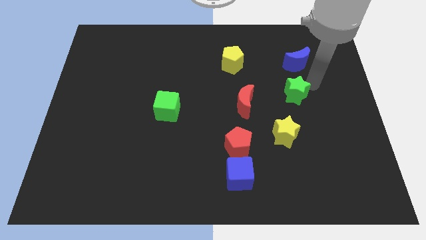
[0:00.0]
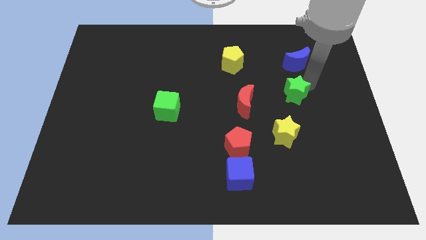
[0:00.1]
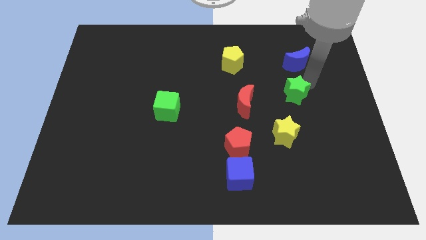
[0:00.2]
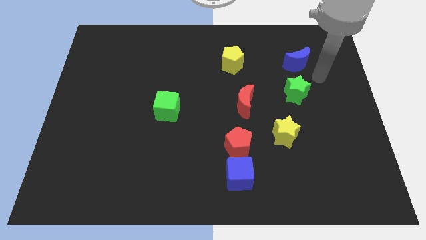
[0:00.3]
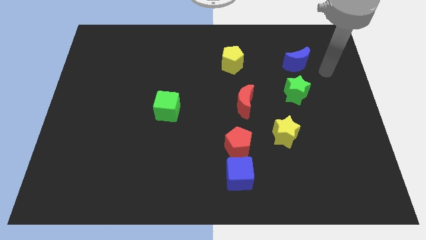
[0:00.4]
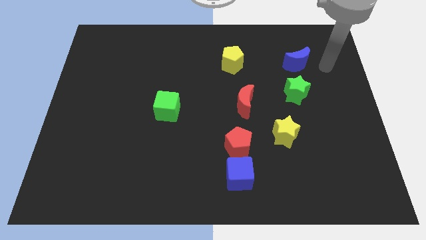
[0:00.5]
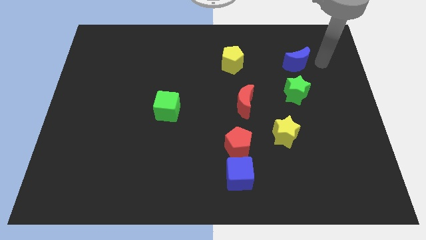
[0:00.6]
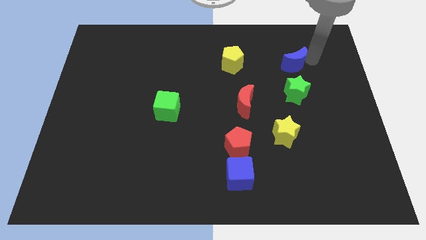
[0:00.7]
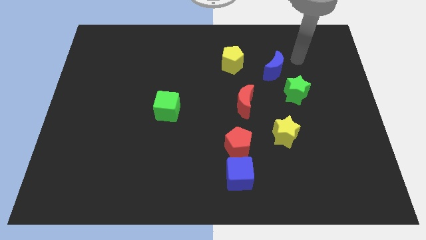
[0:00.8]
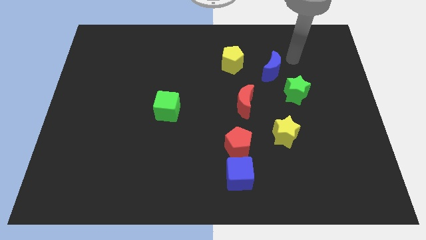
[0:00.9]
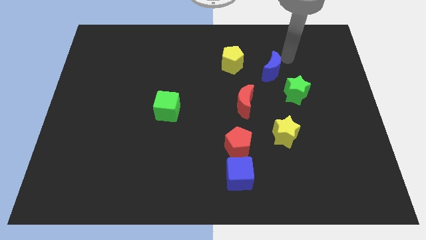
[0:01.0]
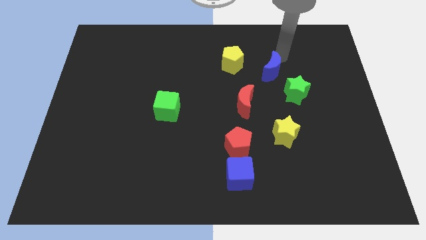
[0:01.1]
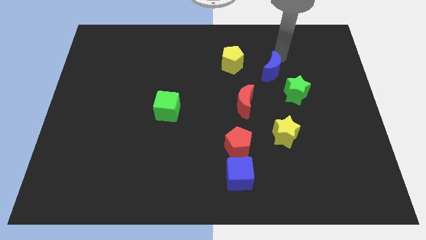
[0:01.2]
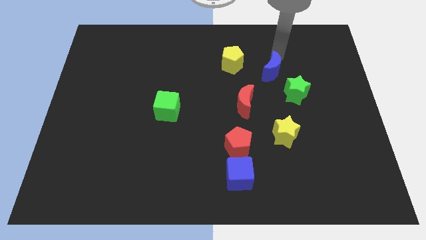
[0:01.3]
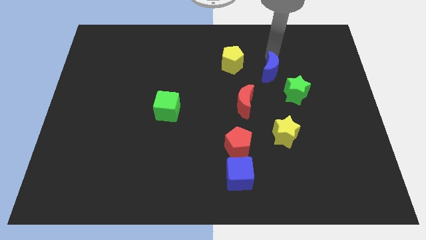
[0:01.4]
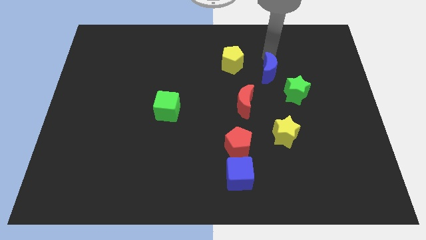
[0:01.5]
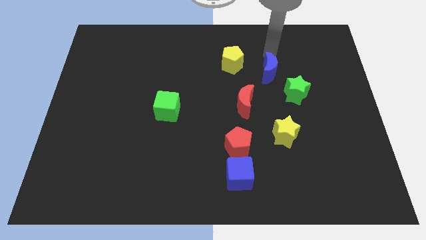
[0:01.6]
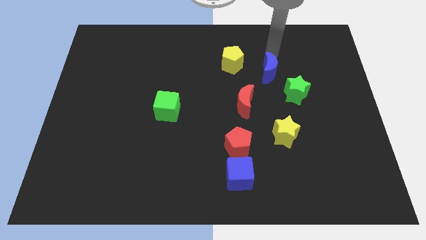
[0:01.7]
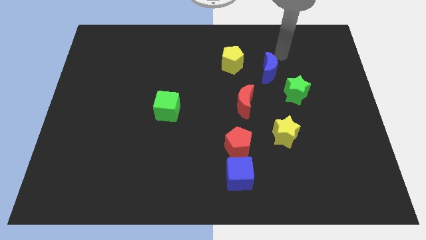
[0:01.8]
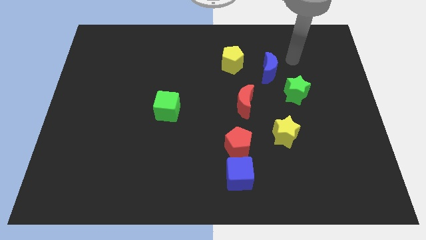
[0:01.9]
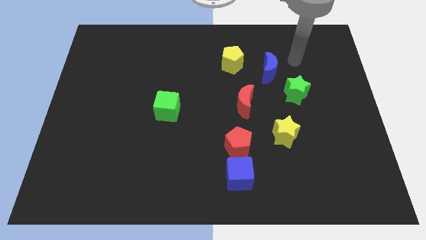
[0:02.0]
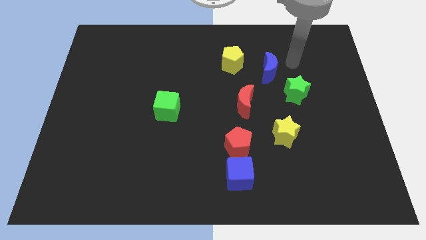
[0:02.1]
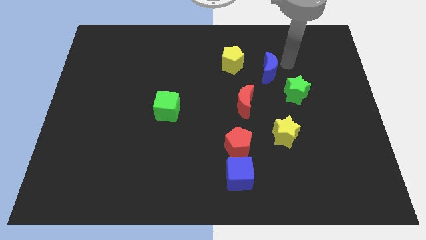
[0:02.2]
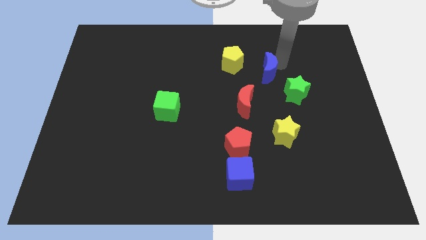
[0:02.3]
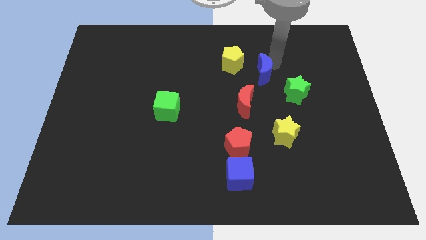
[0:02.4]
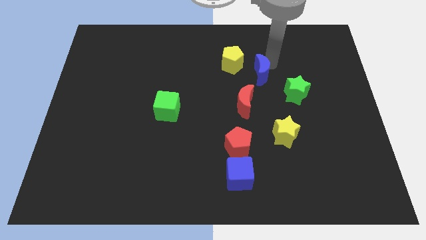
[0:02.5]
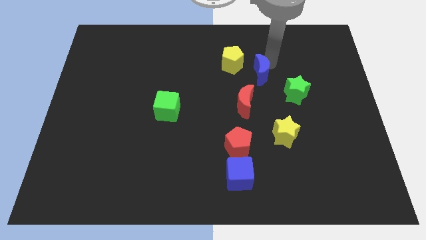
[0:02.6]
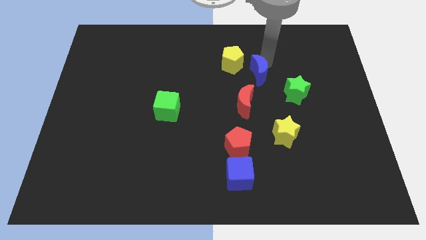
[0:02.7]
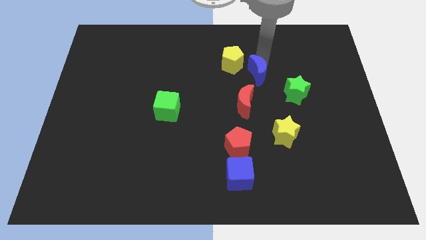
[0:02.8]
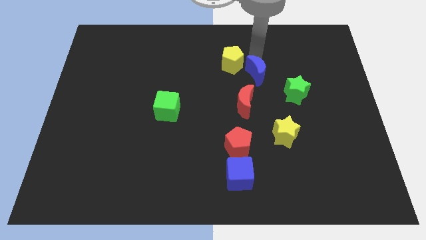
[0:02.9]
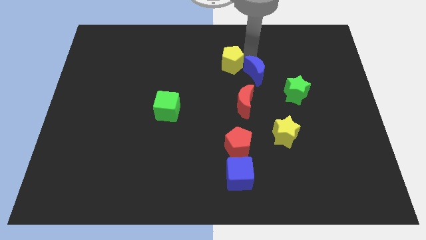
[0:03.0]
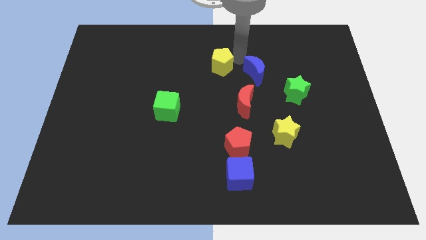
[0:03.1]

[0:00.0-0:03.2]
move the blue moon close to the yellow pentagon

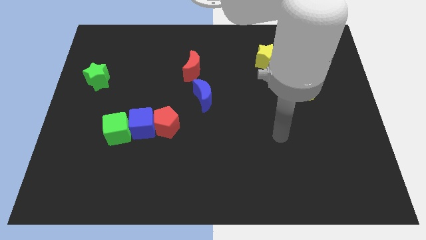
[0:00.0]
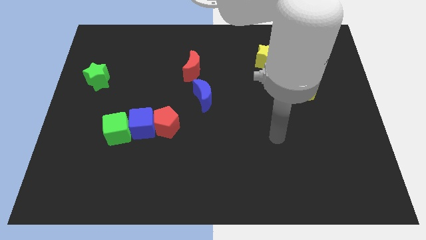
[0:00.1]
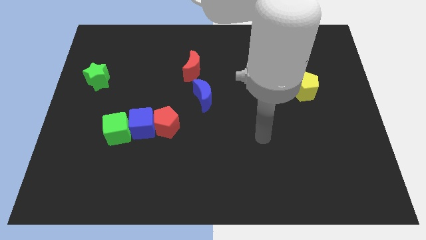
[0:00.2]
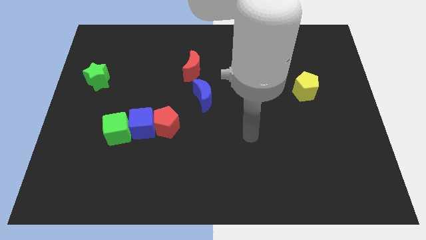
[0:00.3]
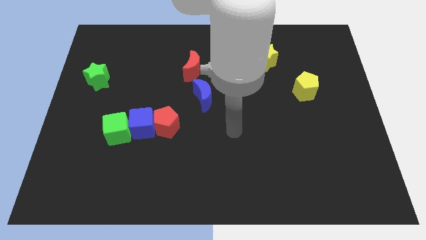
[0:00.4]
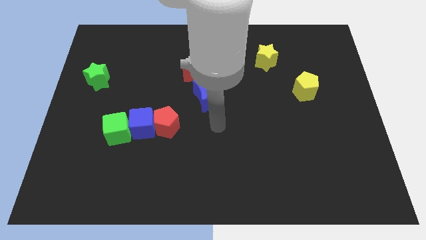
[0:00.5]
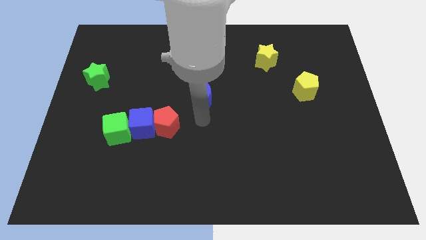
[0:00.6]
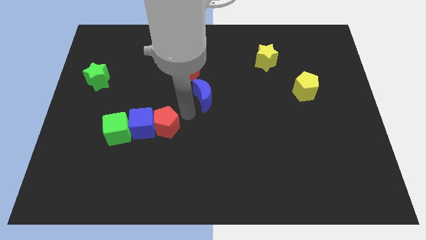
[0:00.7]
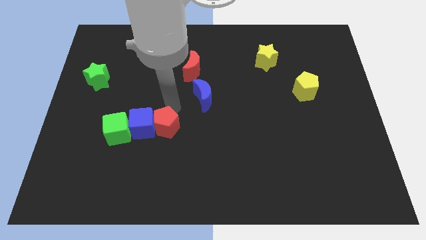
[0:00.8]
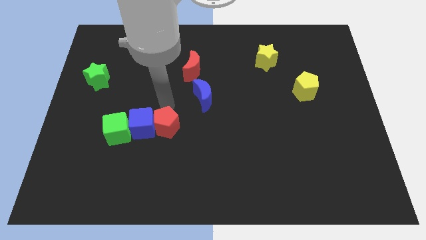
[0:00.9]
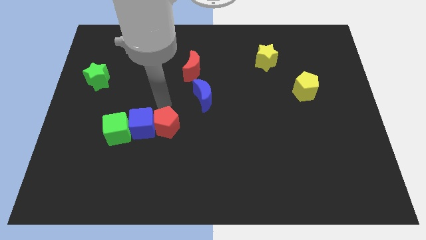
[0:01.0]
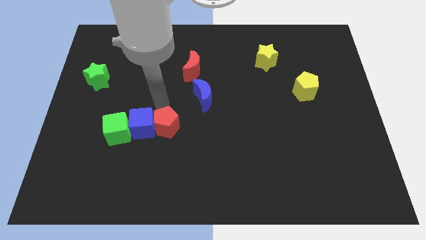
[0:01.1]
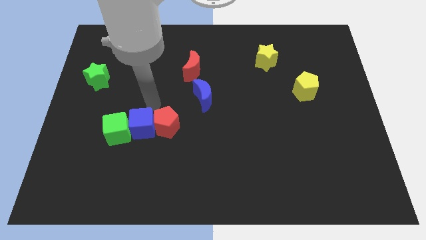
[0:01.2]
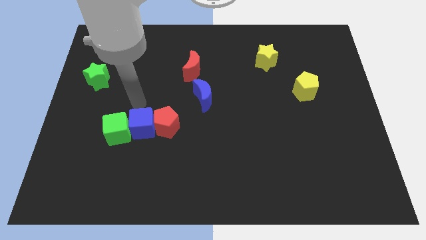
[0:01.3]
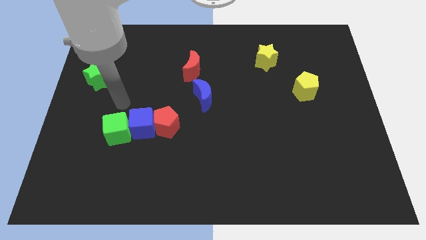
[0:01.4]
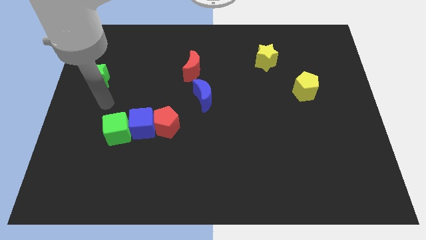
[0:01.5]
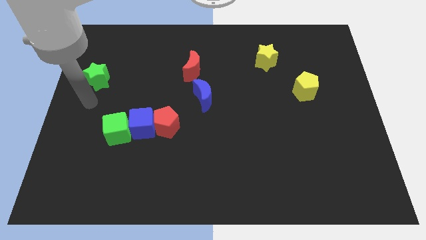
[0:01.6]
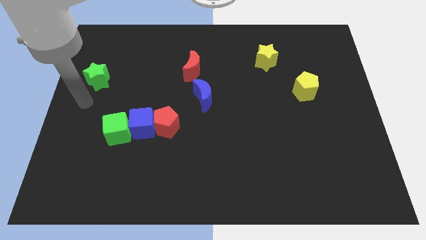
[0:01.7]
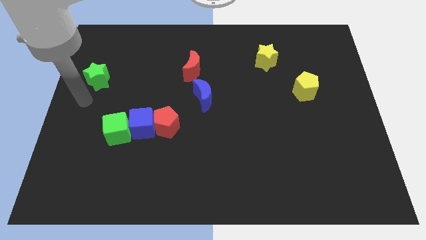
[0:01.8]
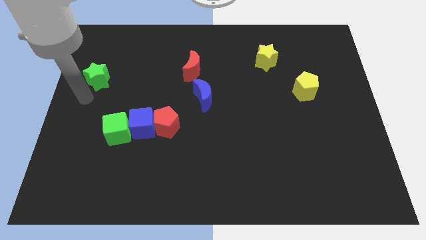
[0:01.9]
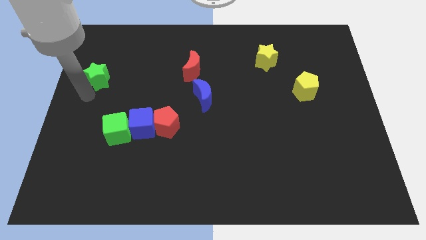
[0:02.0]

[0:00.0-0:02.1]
touch the bottom side of the green cube

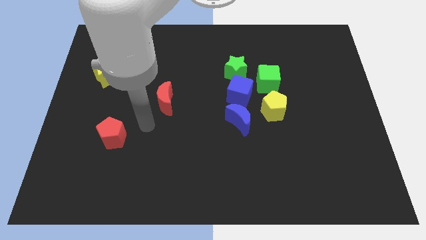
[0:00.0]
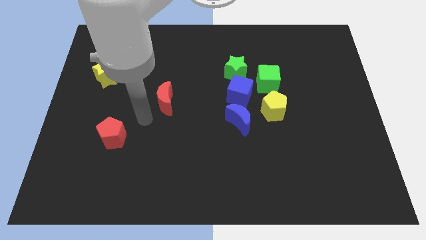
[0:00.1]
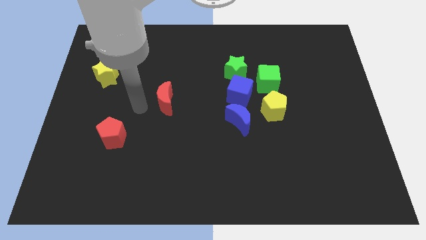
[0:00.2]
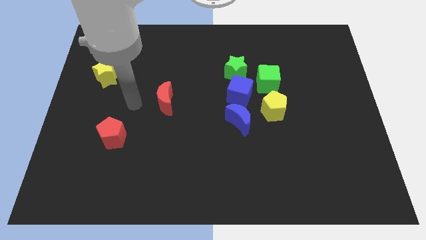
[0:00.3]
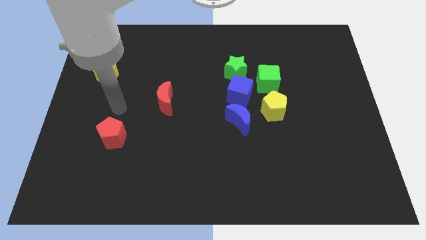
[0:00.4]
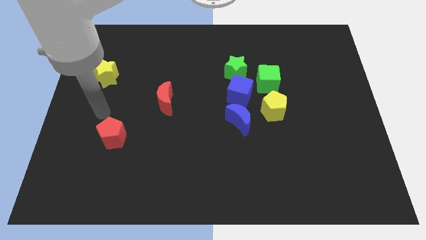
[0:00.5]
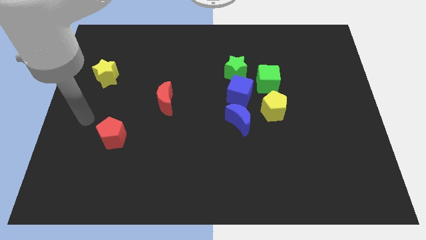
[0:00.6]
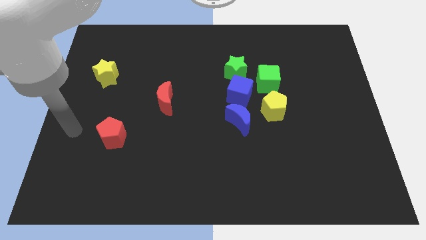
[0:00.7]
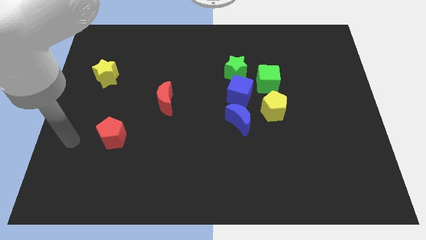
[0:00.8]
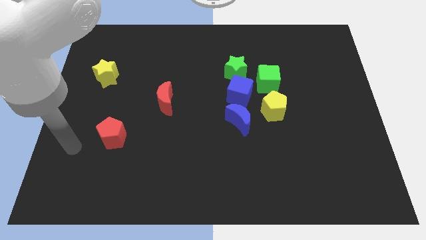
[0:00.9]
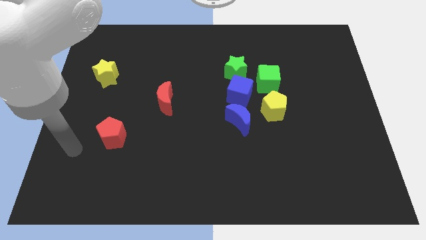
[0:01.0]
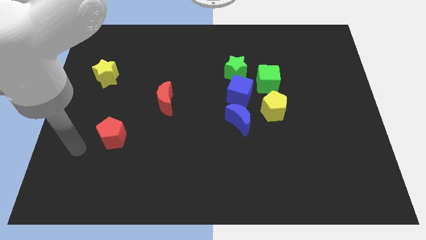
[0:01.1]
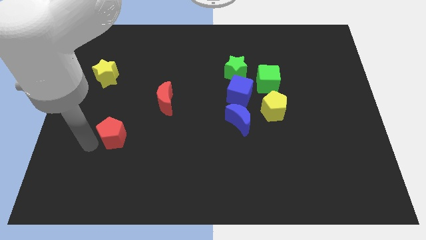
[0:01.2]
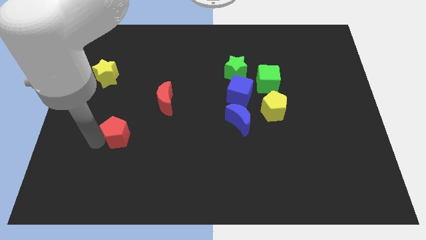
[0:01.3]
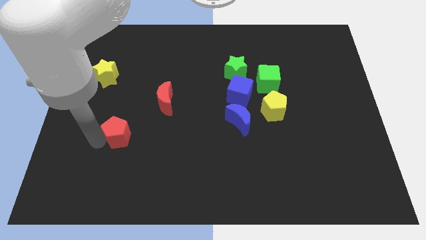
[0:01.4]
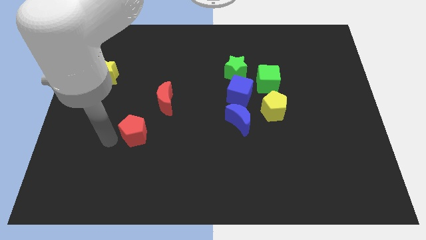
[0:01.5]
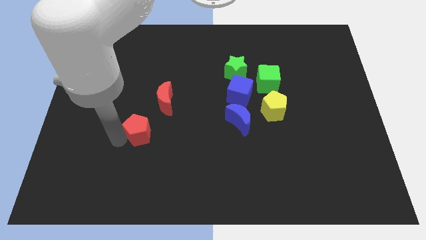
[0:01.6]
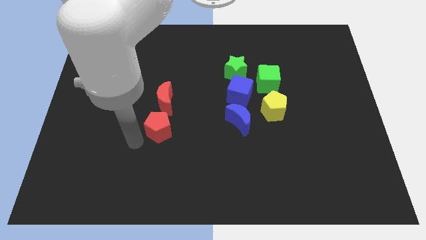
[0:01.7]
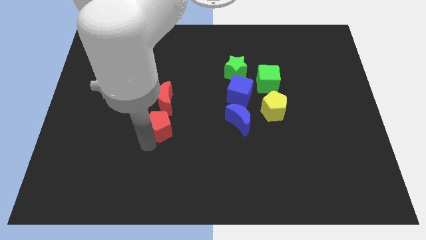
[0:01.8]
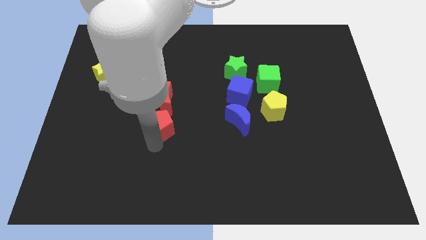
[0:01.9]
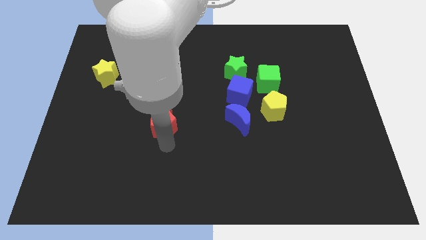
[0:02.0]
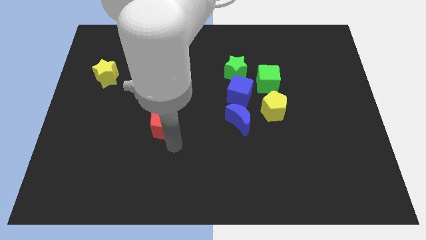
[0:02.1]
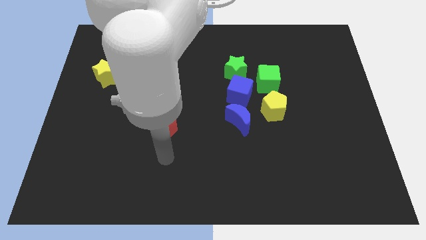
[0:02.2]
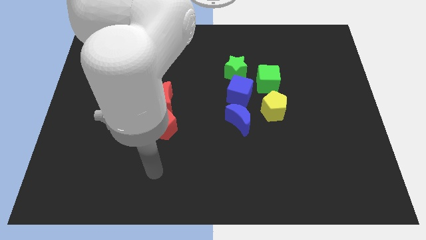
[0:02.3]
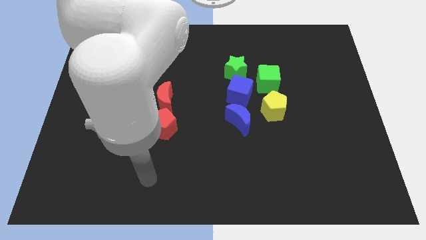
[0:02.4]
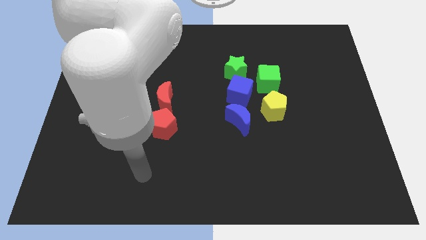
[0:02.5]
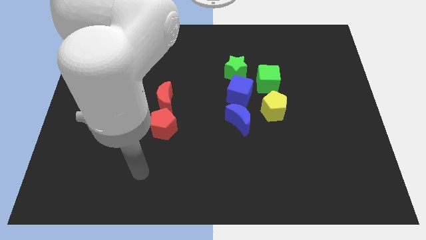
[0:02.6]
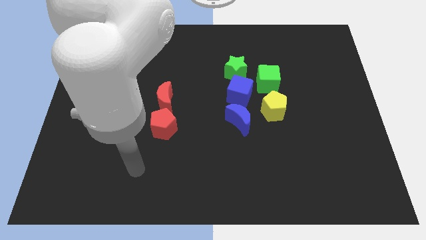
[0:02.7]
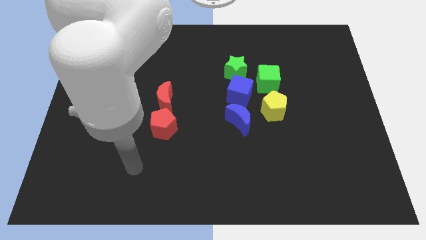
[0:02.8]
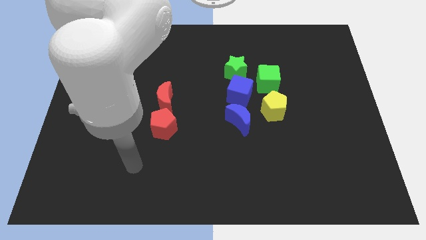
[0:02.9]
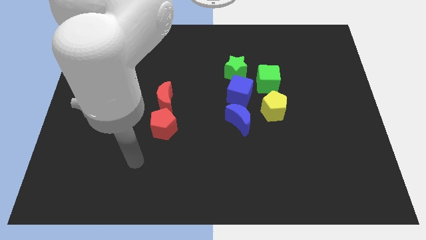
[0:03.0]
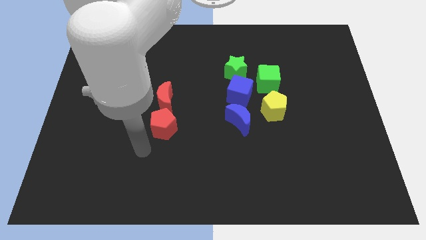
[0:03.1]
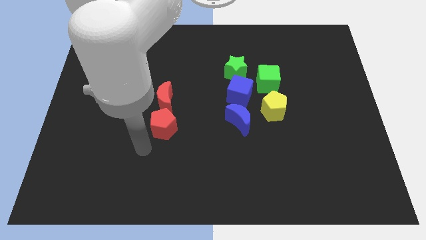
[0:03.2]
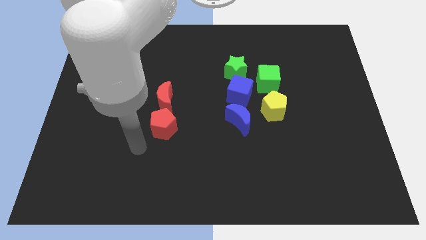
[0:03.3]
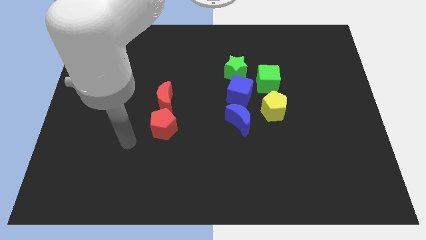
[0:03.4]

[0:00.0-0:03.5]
move the red pentagon towards the bottom side of the red crescent
